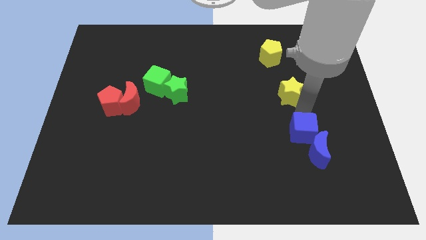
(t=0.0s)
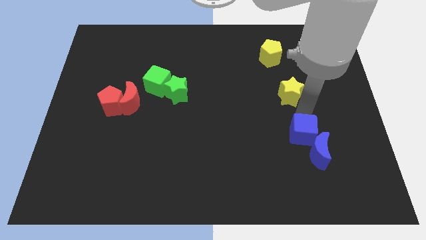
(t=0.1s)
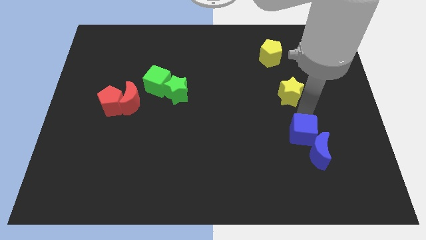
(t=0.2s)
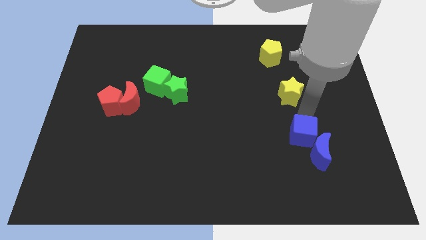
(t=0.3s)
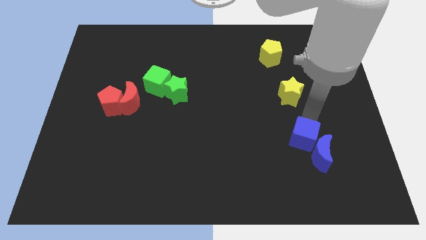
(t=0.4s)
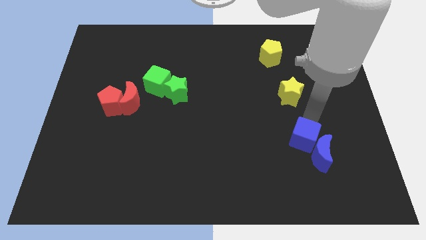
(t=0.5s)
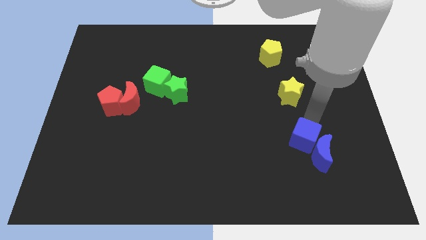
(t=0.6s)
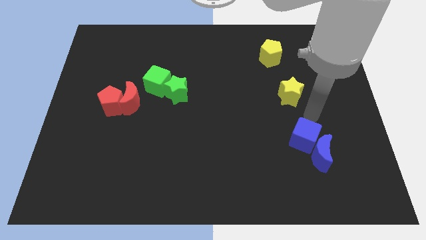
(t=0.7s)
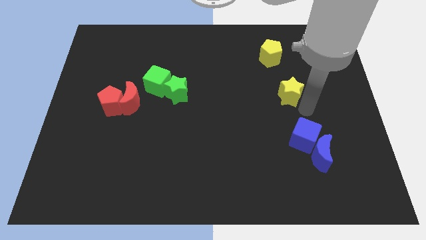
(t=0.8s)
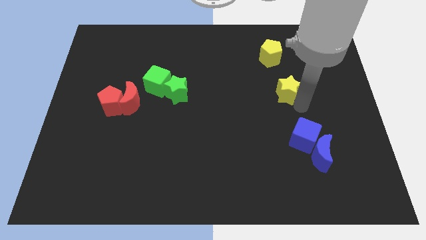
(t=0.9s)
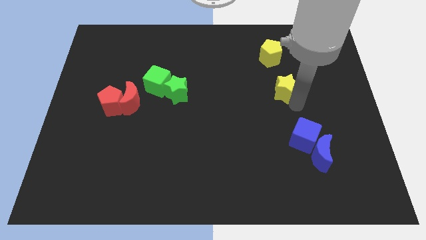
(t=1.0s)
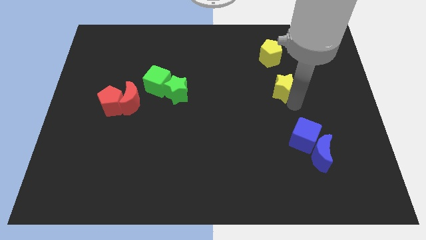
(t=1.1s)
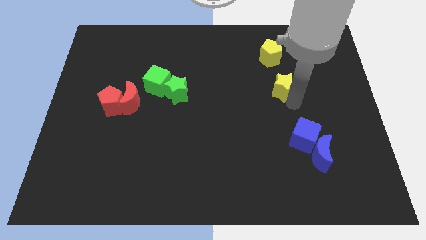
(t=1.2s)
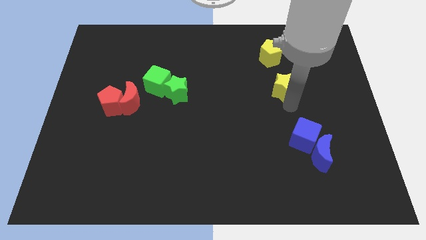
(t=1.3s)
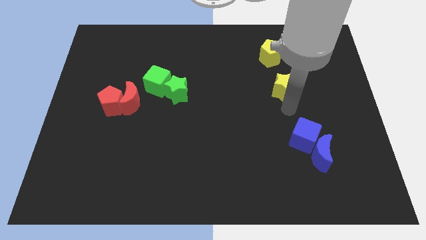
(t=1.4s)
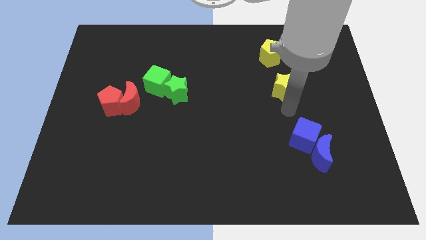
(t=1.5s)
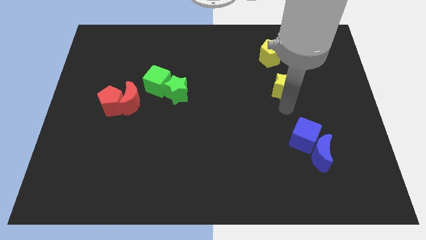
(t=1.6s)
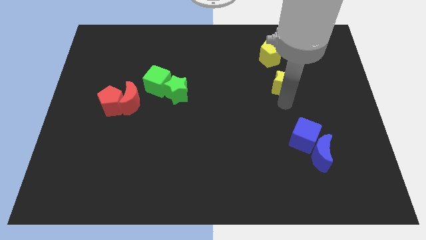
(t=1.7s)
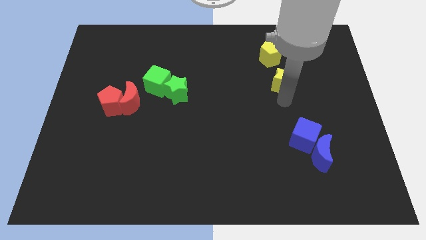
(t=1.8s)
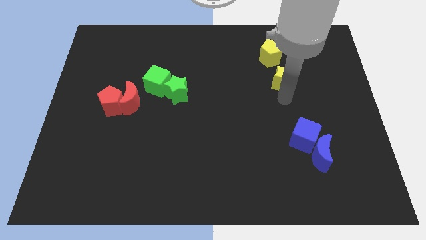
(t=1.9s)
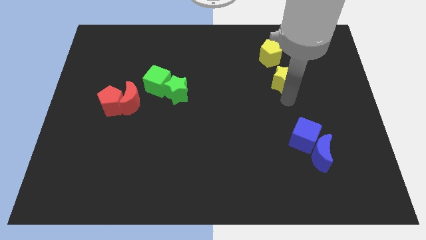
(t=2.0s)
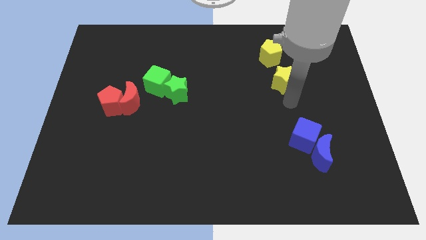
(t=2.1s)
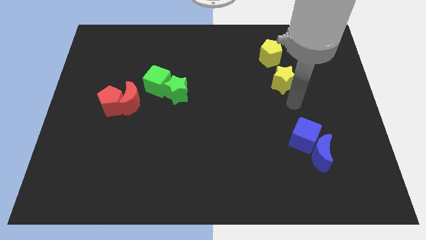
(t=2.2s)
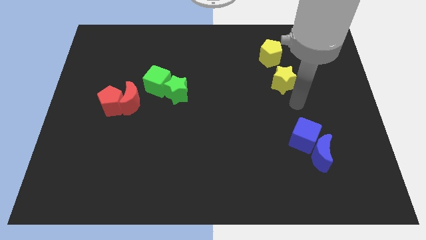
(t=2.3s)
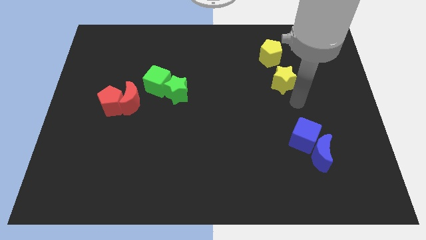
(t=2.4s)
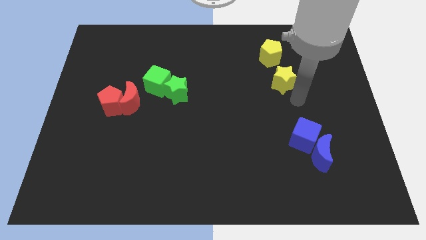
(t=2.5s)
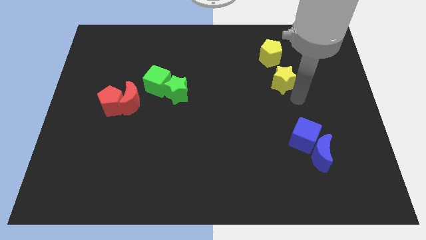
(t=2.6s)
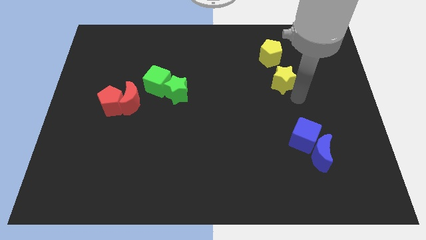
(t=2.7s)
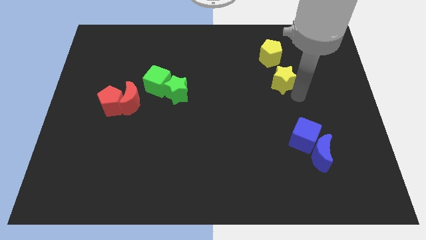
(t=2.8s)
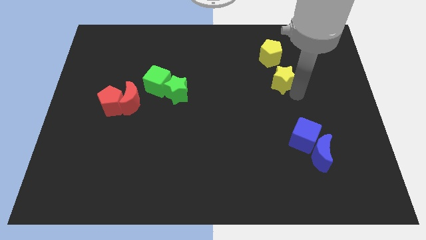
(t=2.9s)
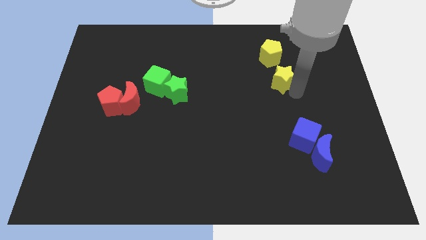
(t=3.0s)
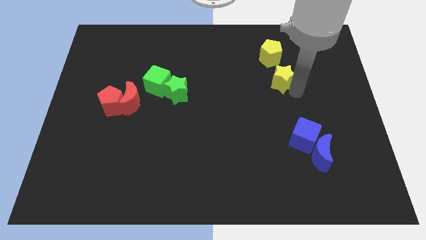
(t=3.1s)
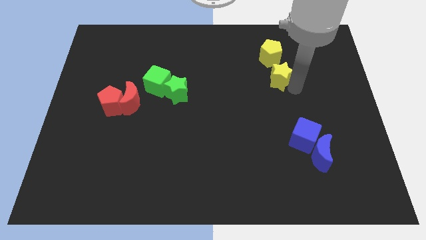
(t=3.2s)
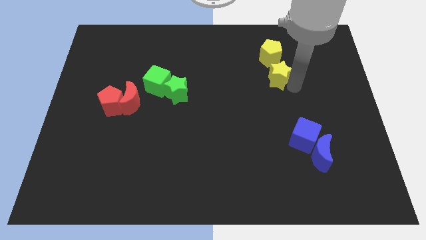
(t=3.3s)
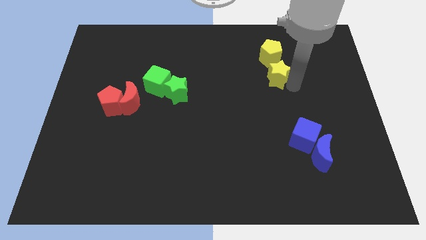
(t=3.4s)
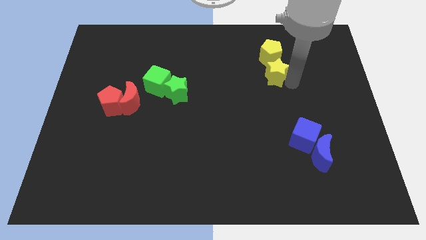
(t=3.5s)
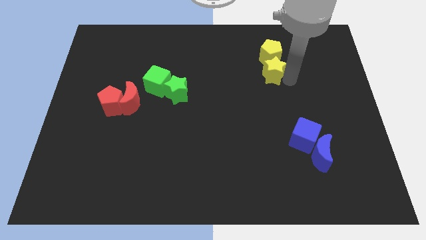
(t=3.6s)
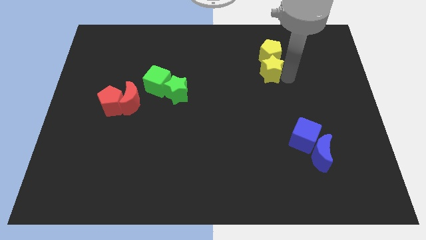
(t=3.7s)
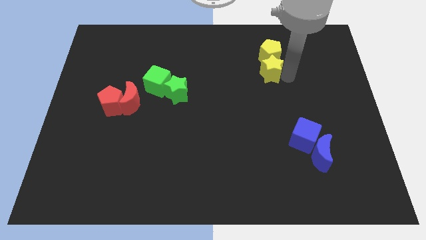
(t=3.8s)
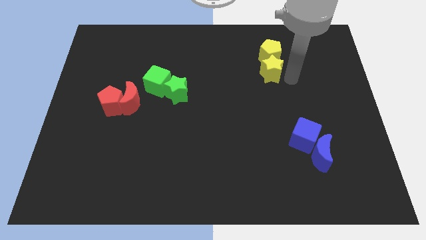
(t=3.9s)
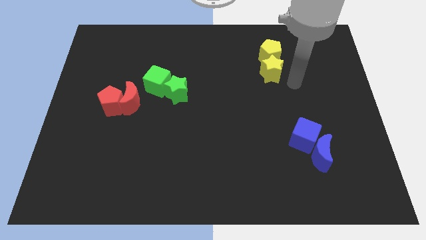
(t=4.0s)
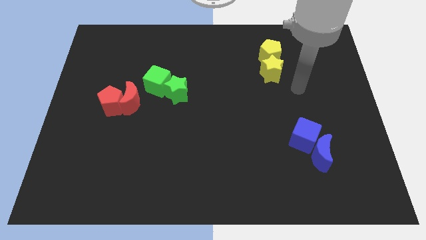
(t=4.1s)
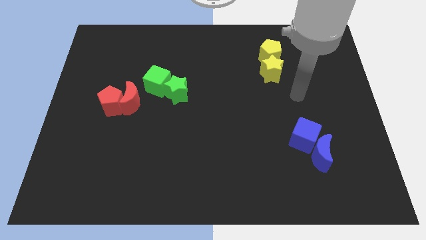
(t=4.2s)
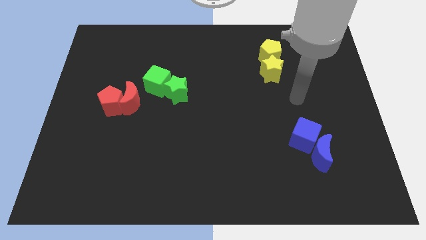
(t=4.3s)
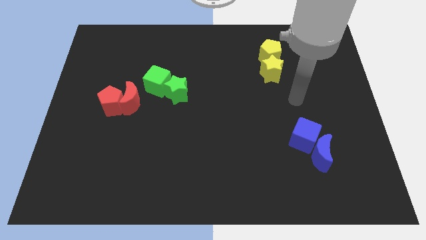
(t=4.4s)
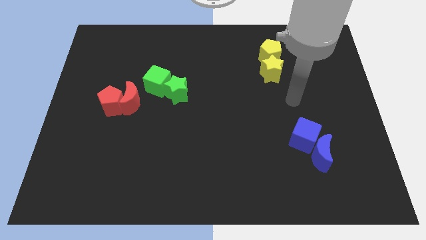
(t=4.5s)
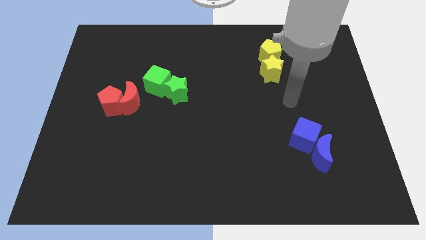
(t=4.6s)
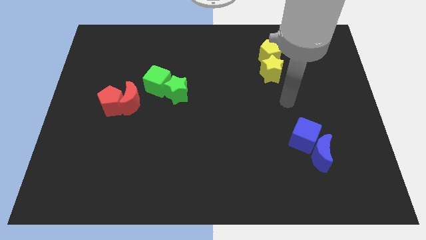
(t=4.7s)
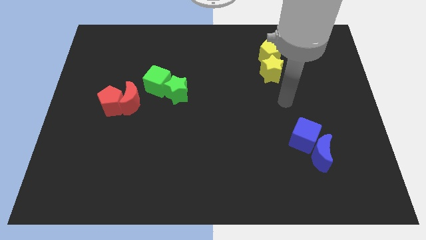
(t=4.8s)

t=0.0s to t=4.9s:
push the yellow star slightly upwards

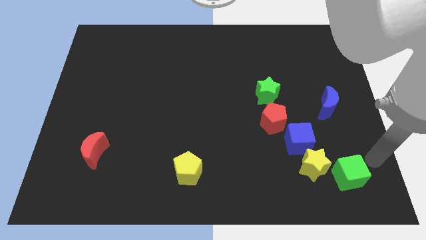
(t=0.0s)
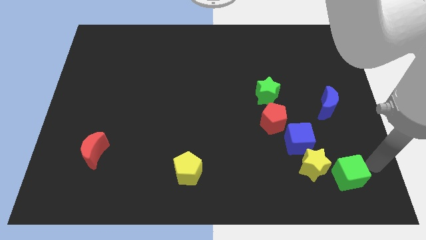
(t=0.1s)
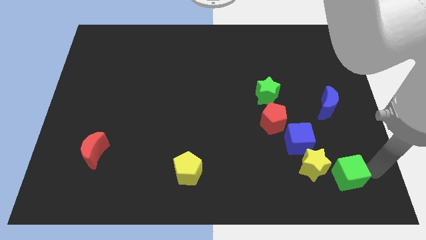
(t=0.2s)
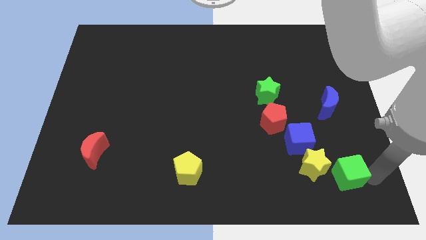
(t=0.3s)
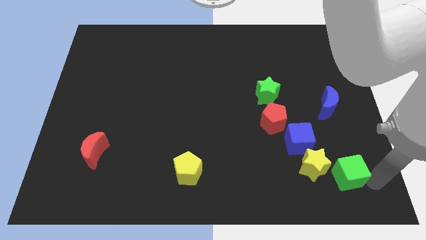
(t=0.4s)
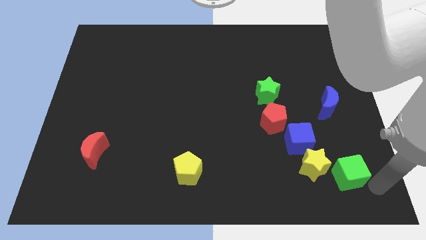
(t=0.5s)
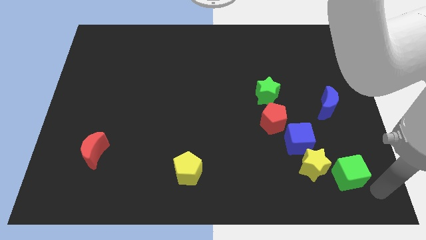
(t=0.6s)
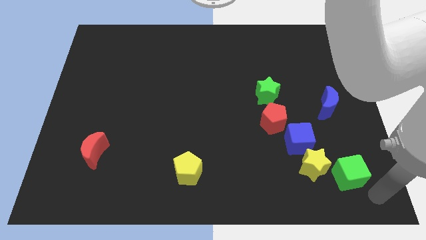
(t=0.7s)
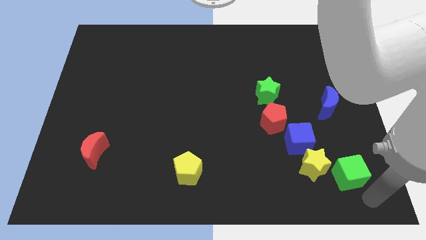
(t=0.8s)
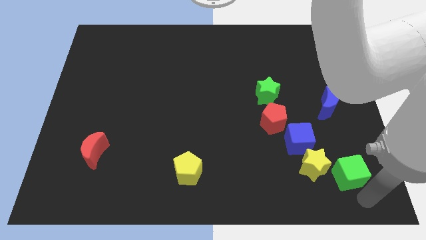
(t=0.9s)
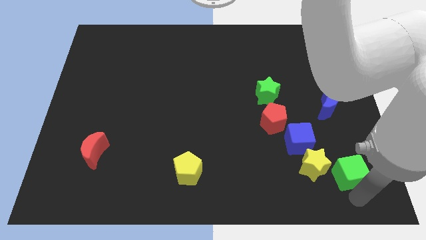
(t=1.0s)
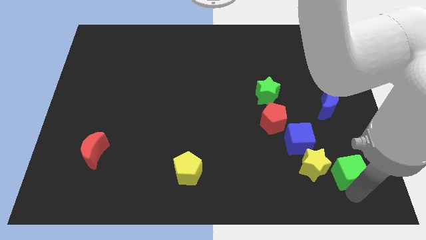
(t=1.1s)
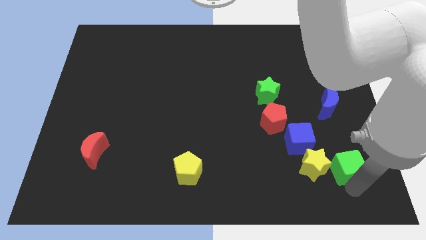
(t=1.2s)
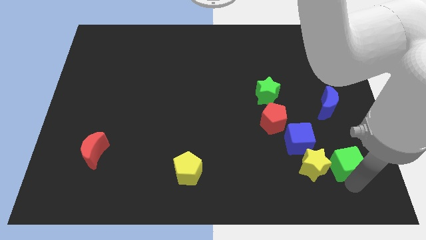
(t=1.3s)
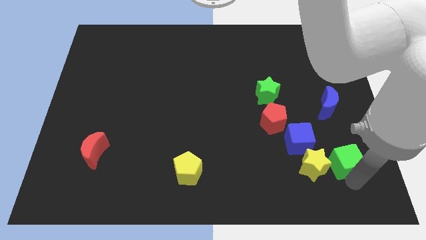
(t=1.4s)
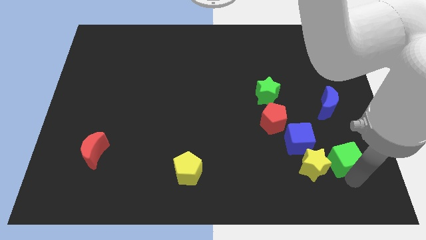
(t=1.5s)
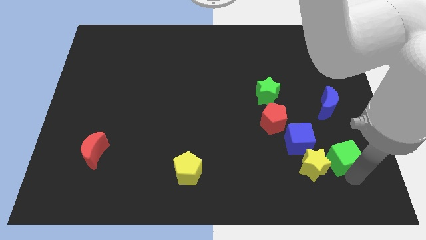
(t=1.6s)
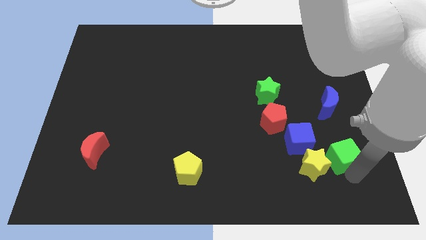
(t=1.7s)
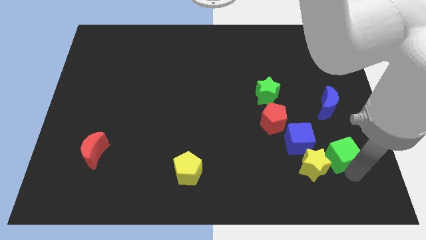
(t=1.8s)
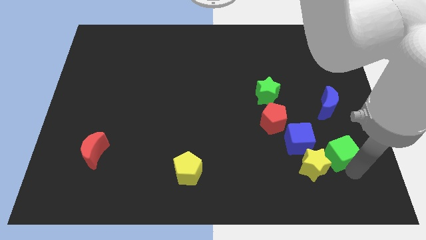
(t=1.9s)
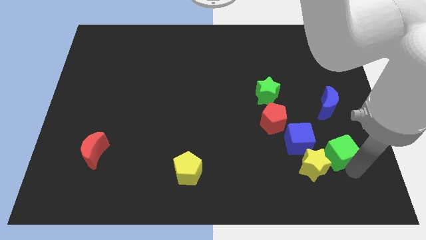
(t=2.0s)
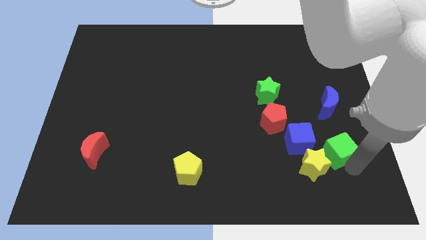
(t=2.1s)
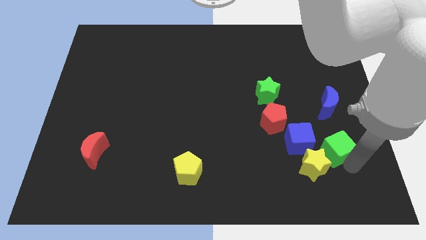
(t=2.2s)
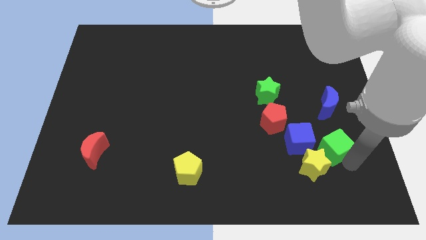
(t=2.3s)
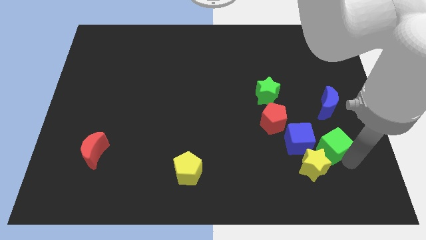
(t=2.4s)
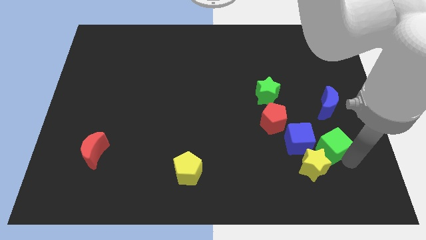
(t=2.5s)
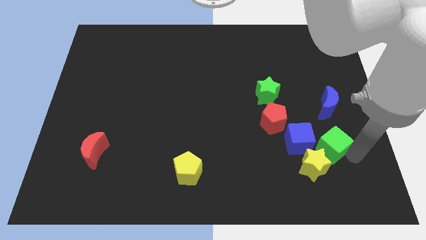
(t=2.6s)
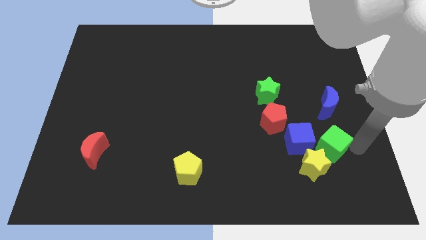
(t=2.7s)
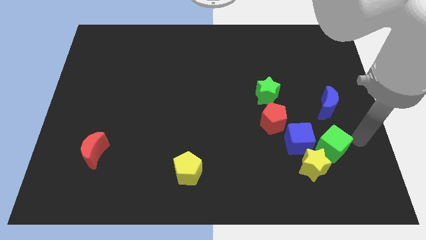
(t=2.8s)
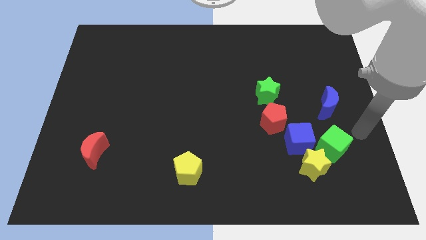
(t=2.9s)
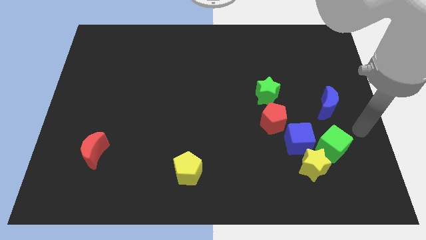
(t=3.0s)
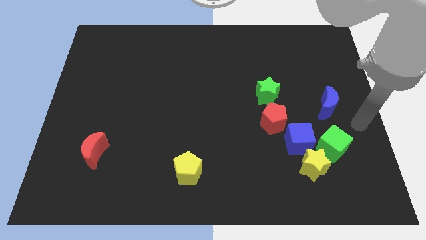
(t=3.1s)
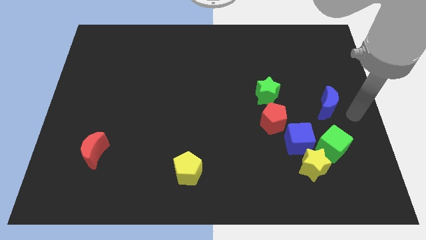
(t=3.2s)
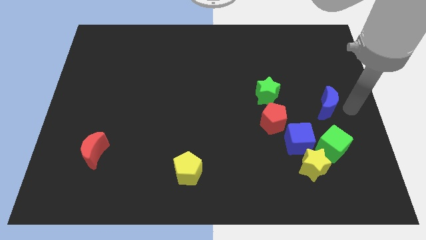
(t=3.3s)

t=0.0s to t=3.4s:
push the green cube towards top of yellow star

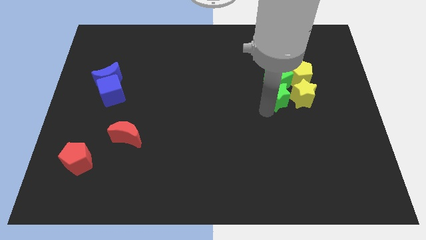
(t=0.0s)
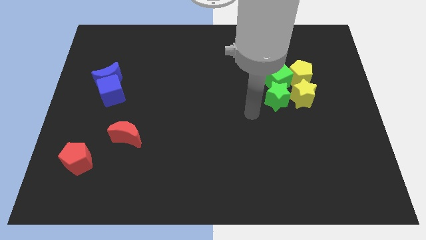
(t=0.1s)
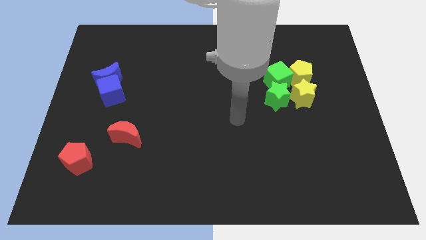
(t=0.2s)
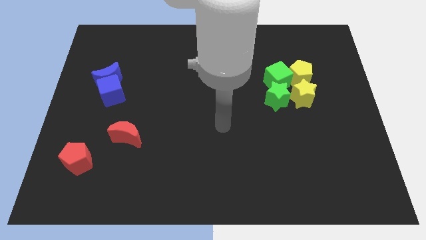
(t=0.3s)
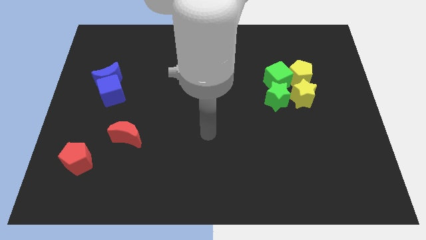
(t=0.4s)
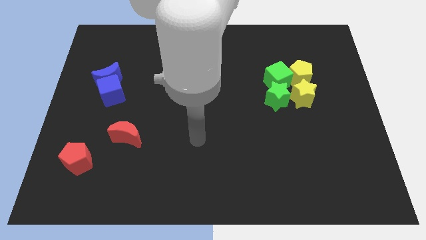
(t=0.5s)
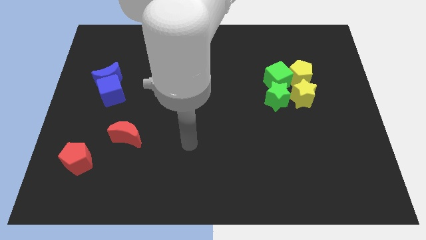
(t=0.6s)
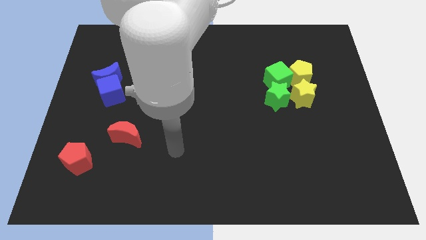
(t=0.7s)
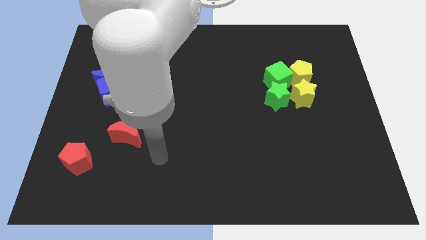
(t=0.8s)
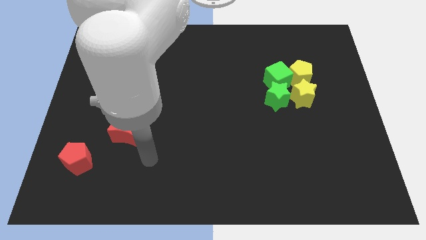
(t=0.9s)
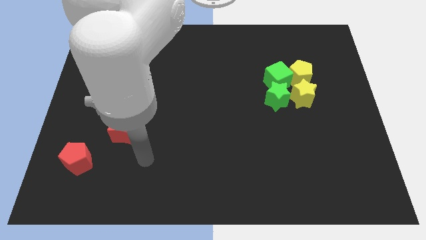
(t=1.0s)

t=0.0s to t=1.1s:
move your arm away from the green star
